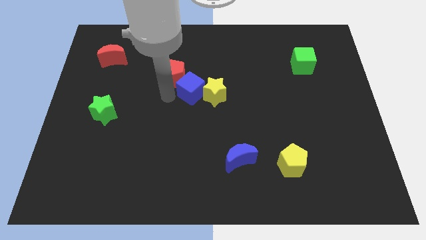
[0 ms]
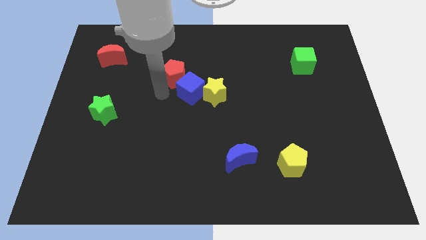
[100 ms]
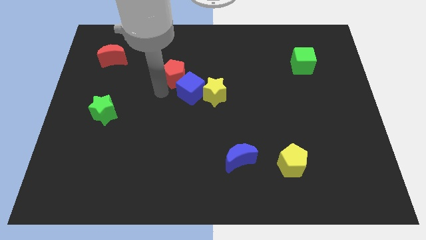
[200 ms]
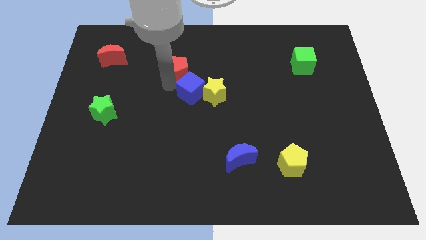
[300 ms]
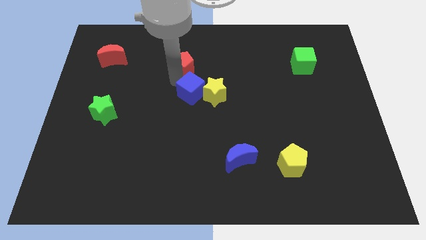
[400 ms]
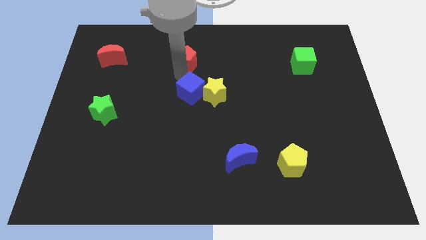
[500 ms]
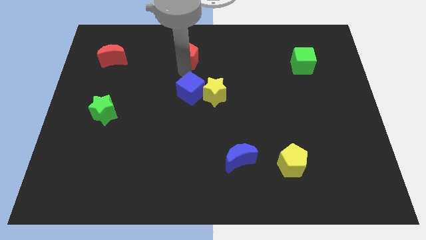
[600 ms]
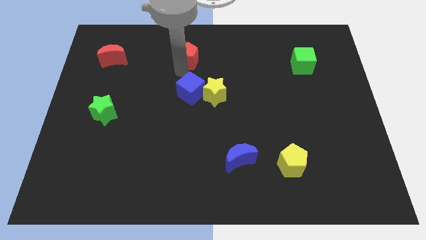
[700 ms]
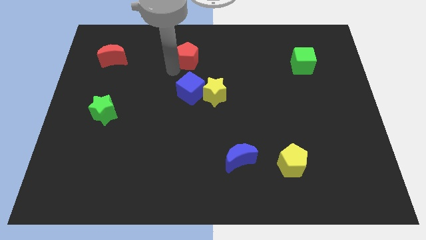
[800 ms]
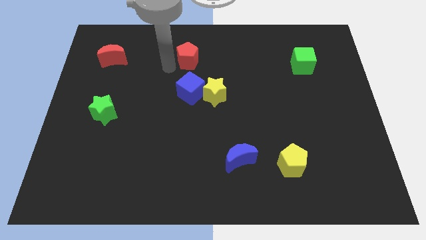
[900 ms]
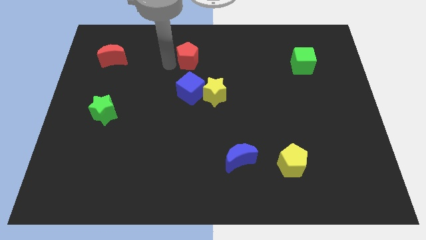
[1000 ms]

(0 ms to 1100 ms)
move the red pentagon to the top of the blue cube

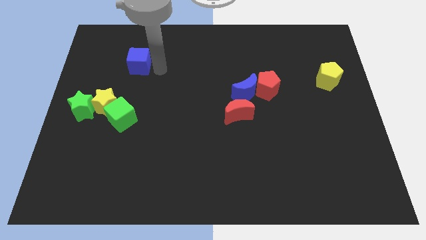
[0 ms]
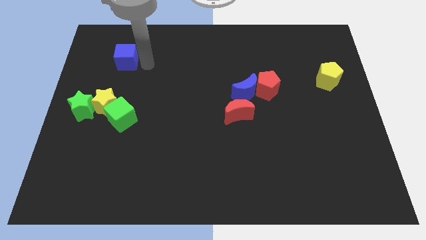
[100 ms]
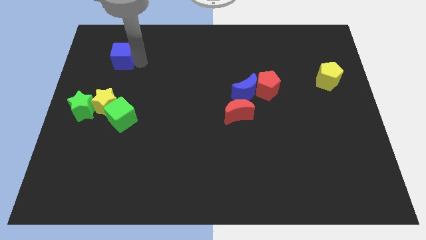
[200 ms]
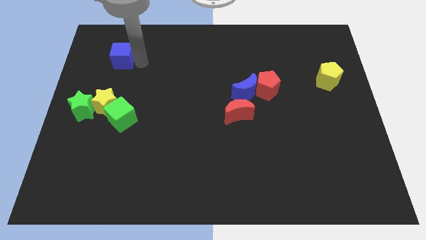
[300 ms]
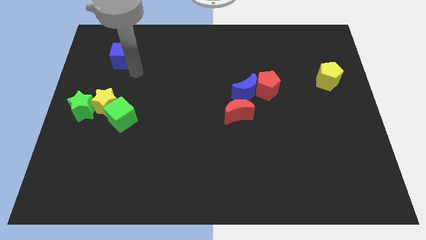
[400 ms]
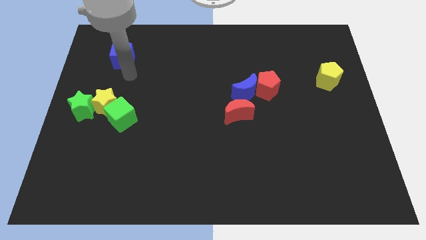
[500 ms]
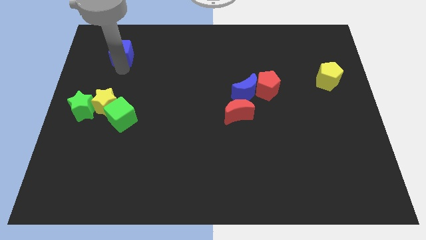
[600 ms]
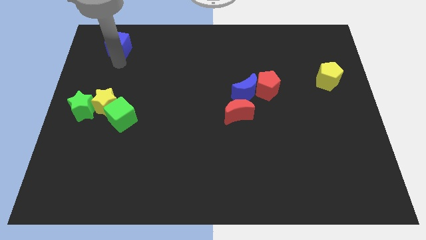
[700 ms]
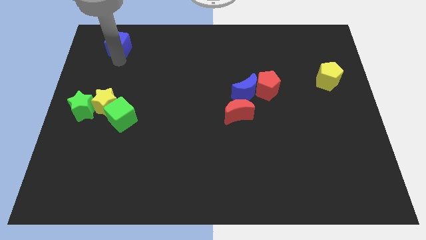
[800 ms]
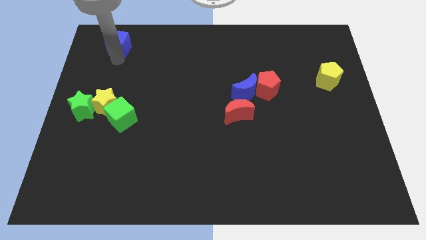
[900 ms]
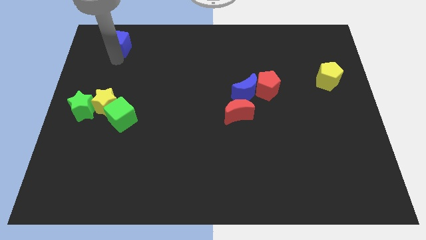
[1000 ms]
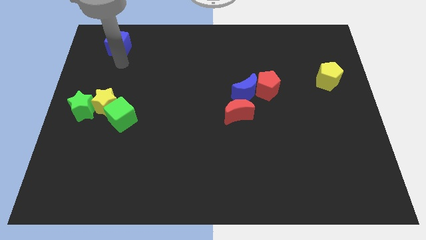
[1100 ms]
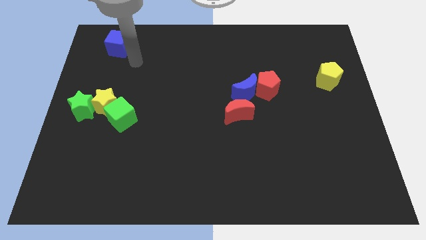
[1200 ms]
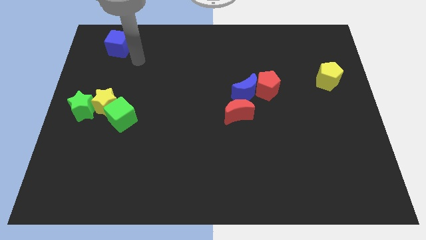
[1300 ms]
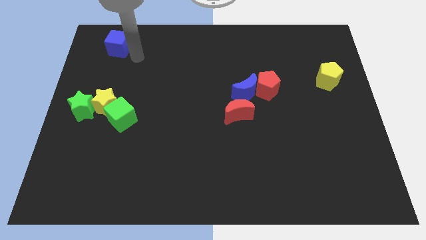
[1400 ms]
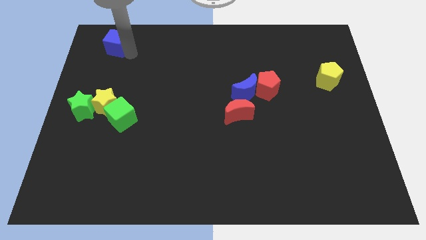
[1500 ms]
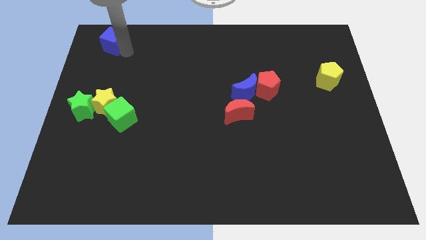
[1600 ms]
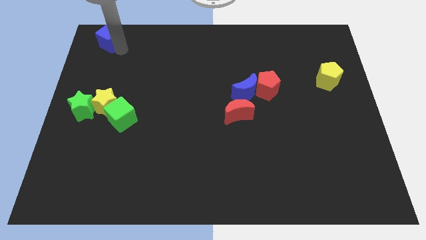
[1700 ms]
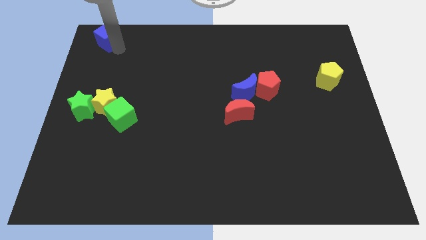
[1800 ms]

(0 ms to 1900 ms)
push the blue cube to the top left corner

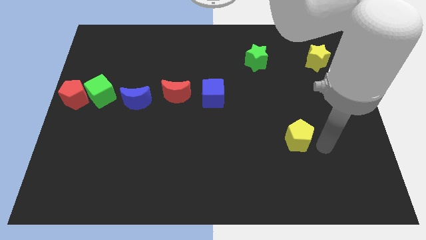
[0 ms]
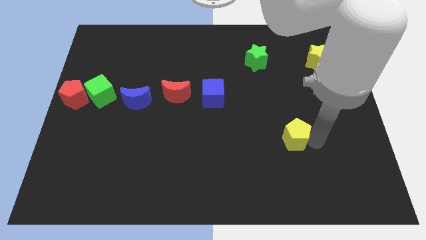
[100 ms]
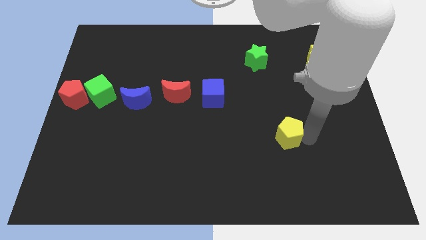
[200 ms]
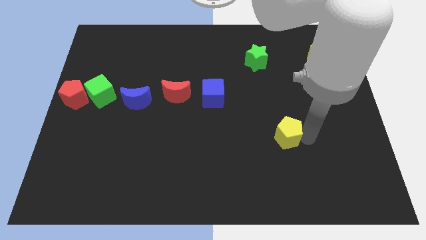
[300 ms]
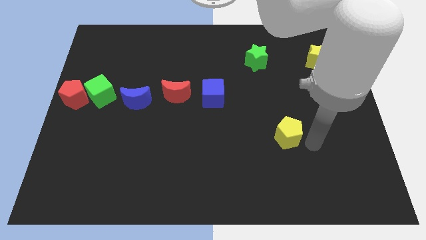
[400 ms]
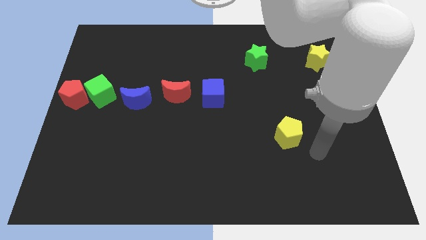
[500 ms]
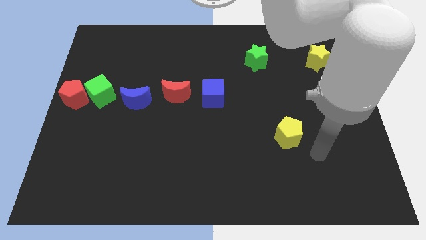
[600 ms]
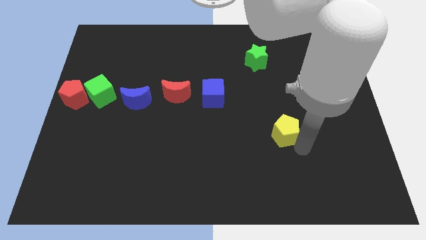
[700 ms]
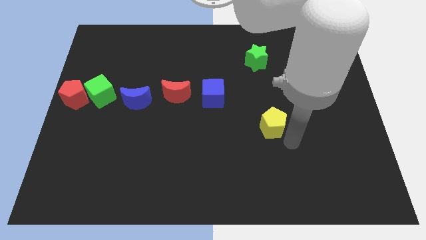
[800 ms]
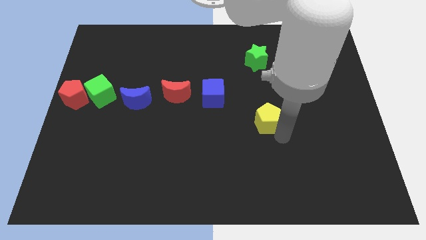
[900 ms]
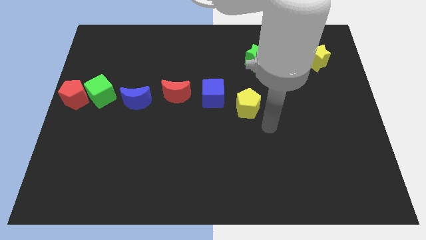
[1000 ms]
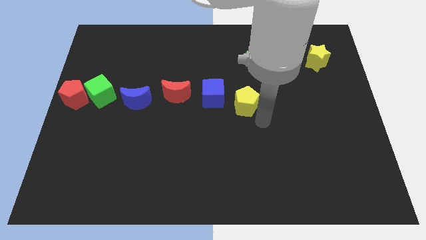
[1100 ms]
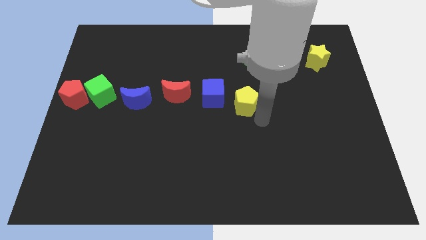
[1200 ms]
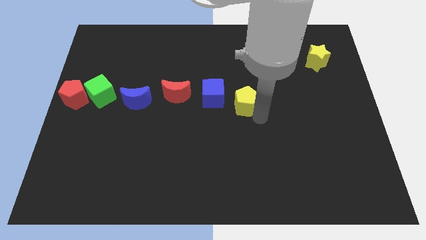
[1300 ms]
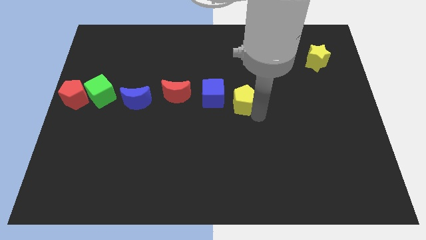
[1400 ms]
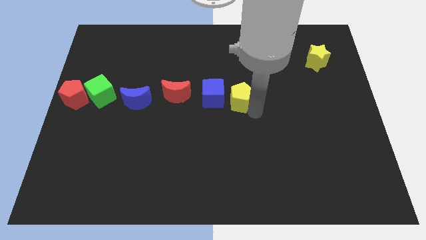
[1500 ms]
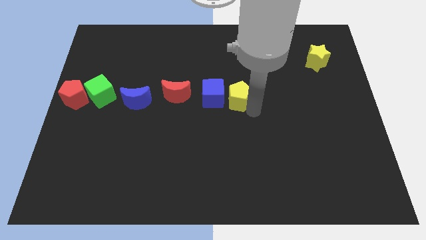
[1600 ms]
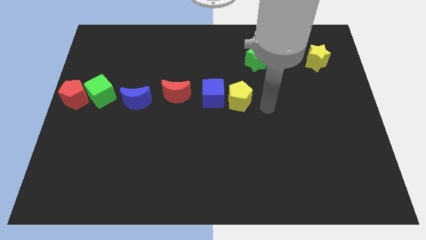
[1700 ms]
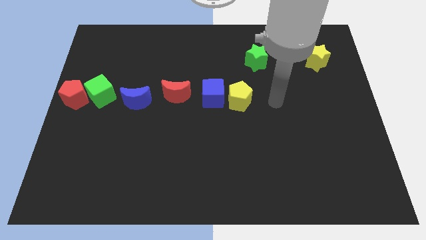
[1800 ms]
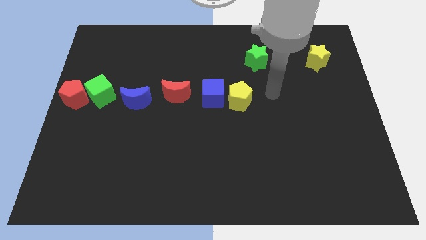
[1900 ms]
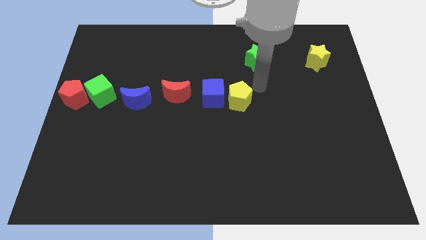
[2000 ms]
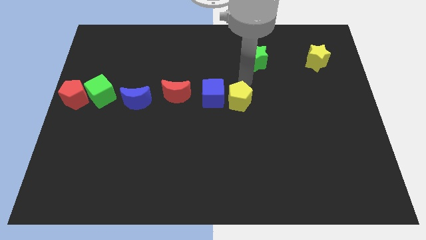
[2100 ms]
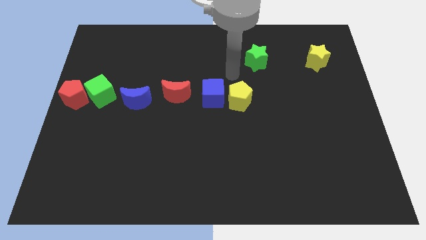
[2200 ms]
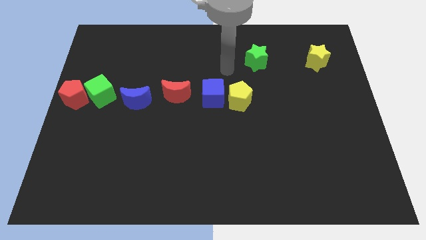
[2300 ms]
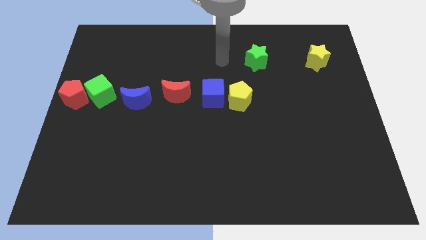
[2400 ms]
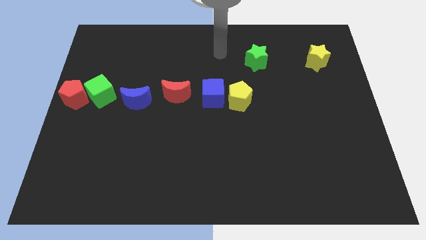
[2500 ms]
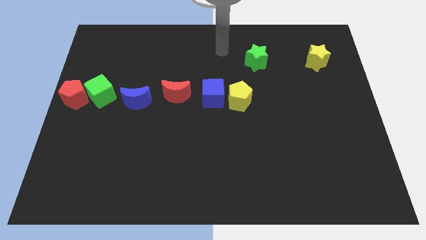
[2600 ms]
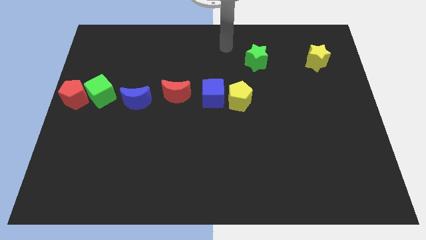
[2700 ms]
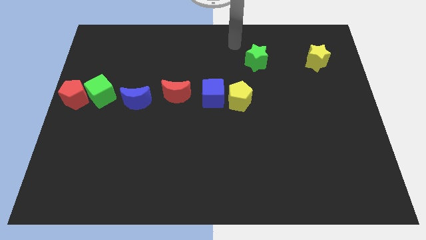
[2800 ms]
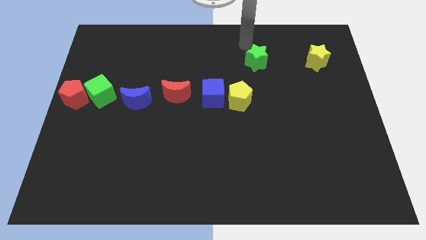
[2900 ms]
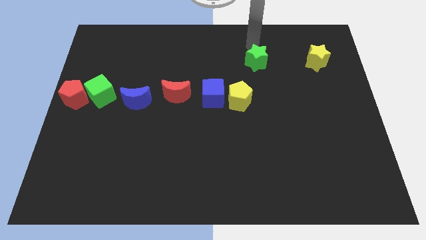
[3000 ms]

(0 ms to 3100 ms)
place the yellow pentagon to the right side of the blue cube

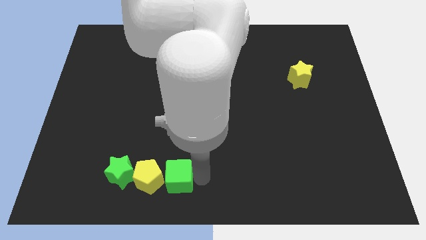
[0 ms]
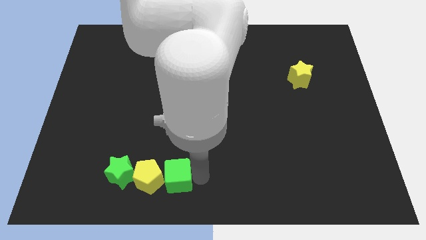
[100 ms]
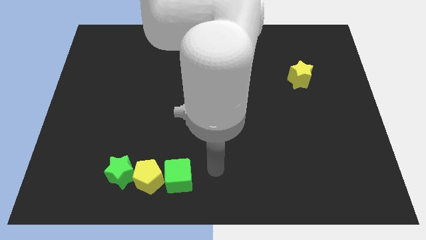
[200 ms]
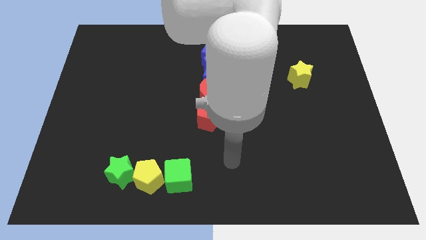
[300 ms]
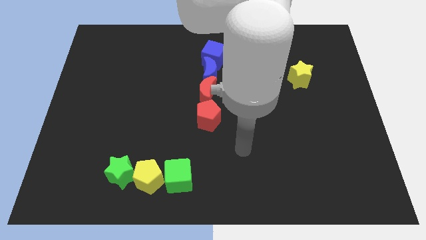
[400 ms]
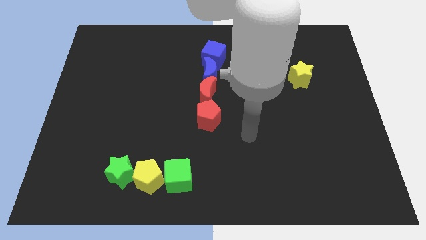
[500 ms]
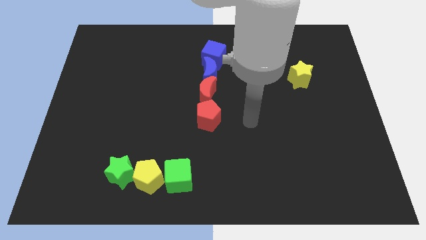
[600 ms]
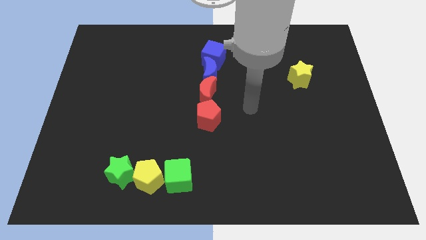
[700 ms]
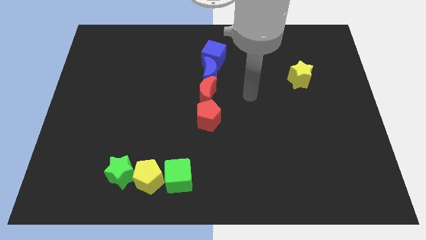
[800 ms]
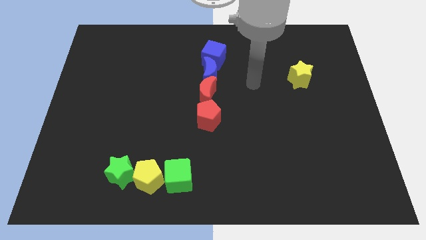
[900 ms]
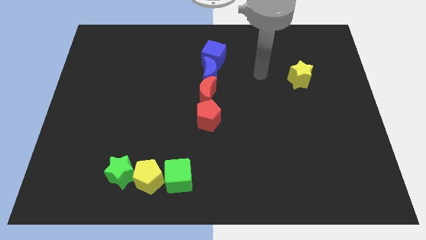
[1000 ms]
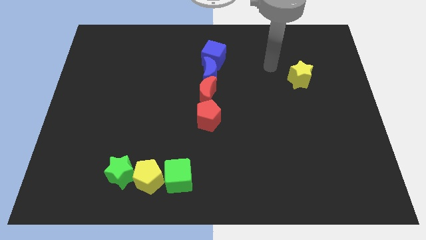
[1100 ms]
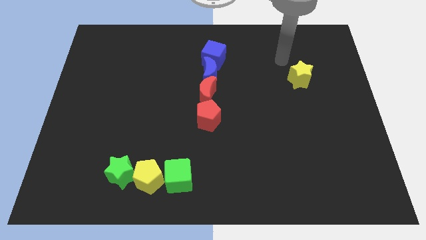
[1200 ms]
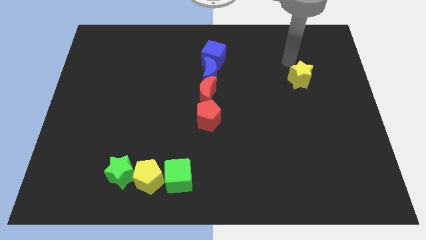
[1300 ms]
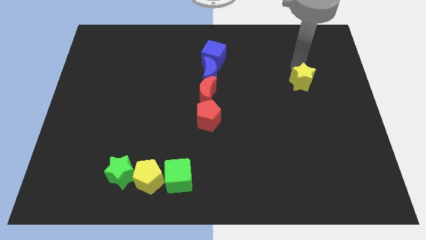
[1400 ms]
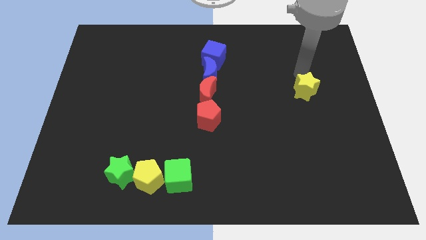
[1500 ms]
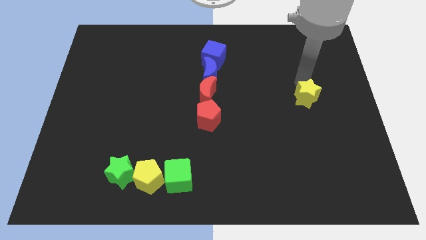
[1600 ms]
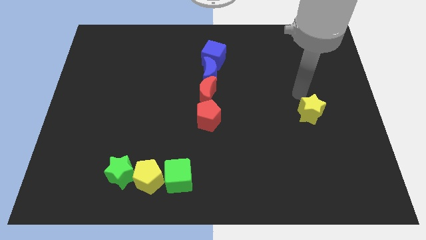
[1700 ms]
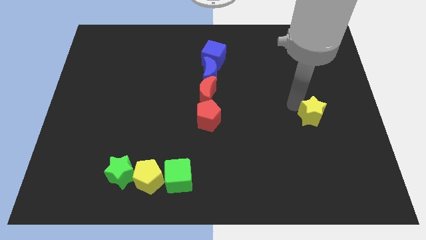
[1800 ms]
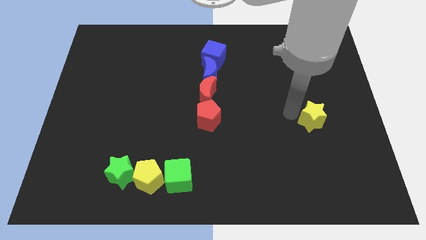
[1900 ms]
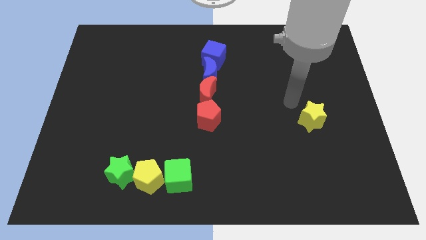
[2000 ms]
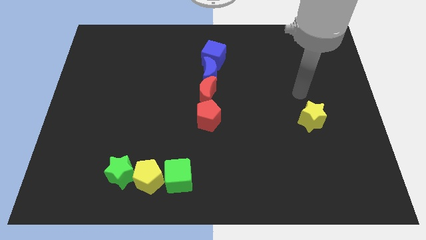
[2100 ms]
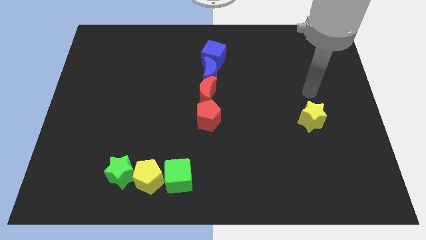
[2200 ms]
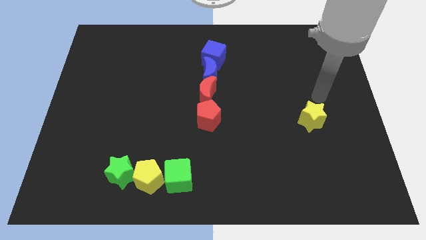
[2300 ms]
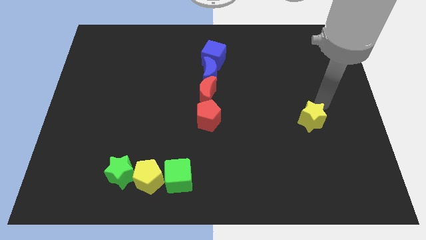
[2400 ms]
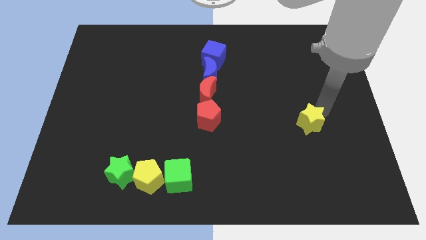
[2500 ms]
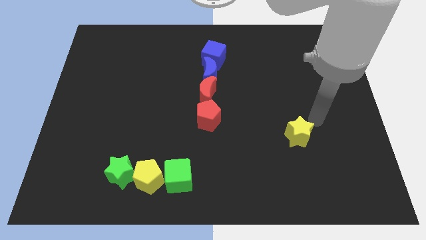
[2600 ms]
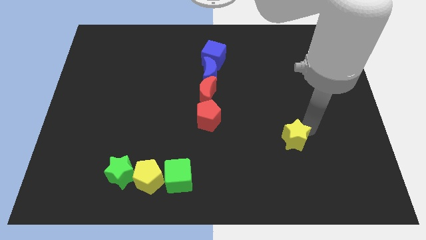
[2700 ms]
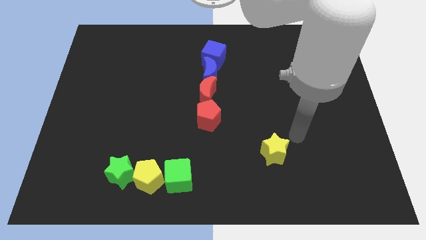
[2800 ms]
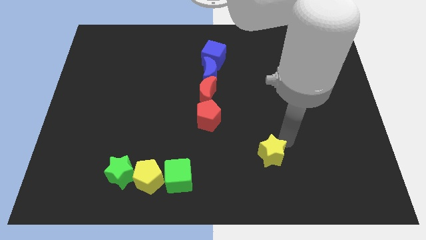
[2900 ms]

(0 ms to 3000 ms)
push yellow star downwards
